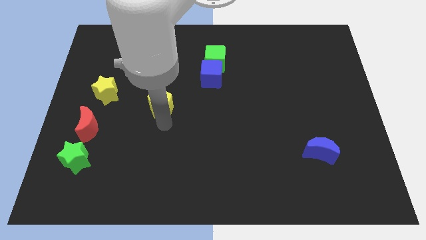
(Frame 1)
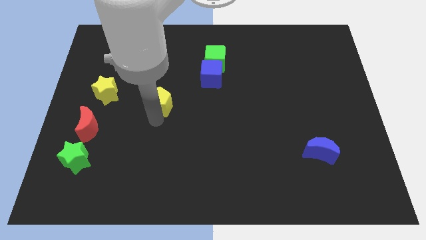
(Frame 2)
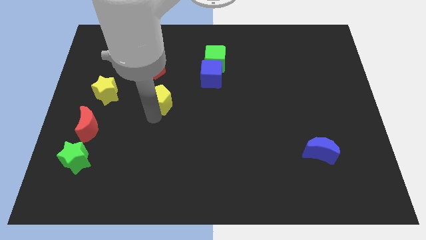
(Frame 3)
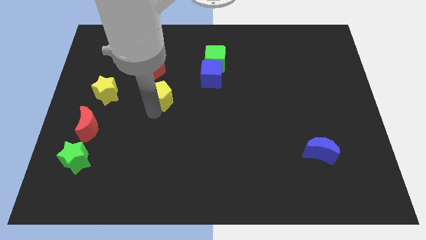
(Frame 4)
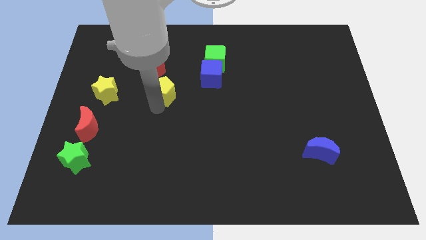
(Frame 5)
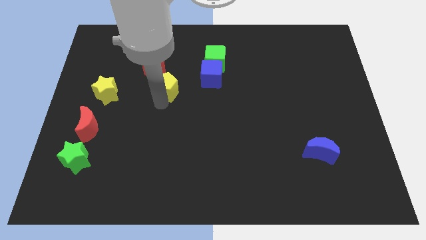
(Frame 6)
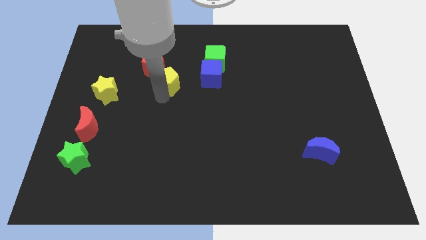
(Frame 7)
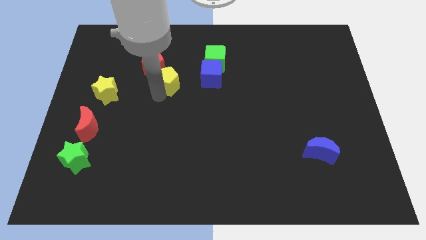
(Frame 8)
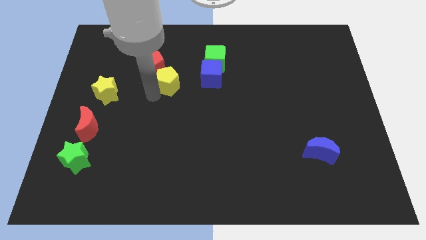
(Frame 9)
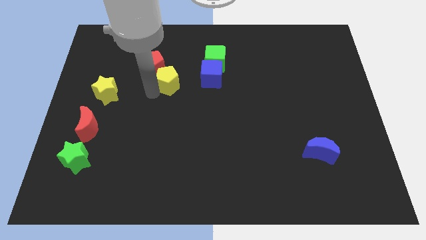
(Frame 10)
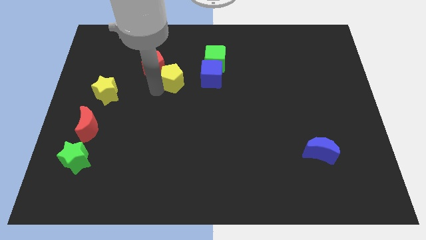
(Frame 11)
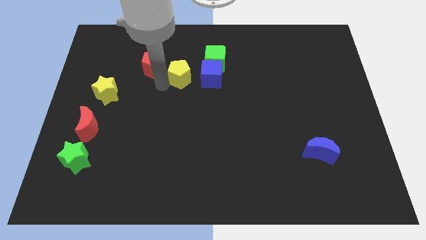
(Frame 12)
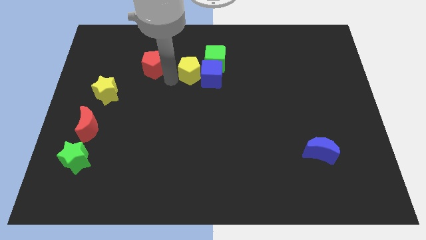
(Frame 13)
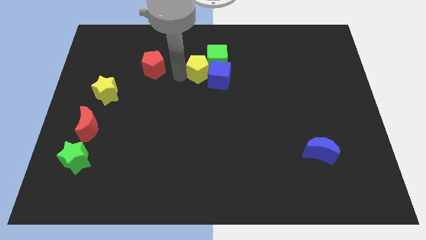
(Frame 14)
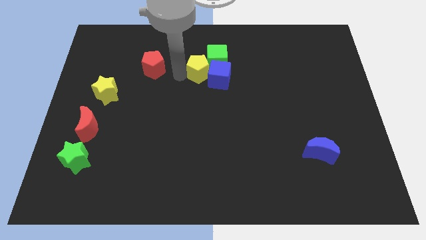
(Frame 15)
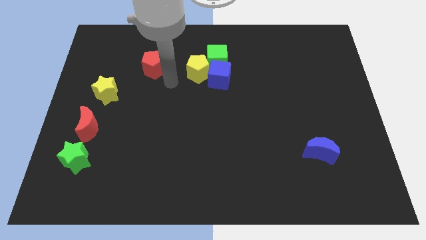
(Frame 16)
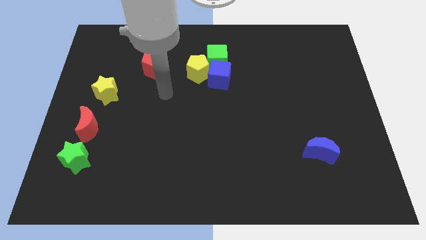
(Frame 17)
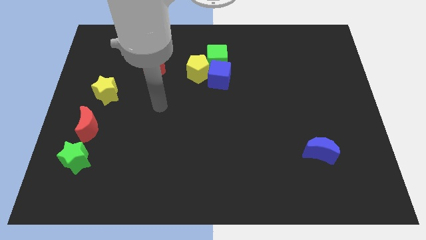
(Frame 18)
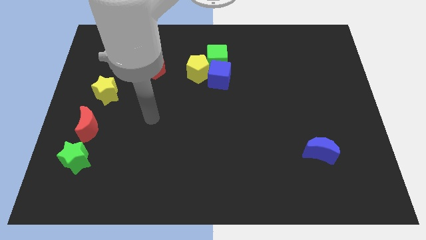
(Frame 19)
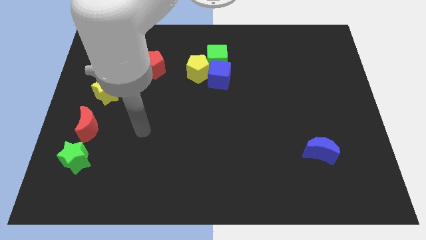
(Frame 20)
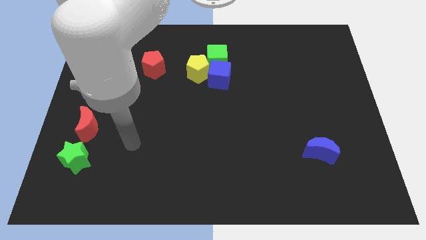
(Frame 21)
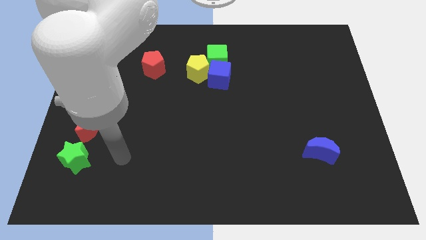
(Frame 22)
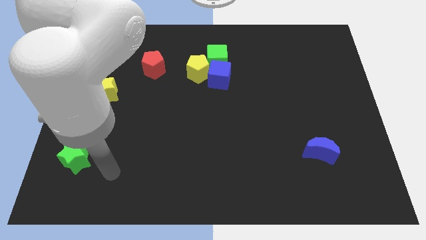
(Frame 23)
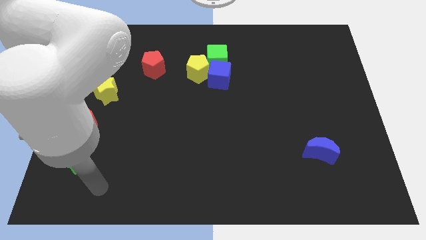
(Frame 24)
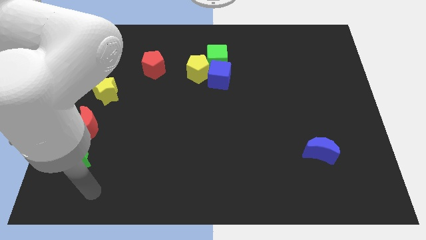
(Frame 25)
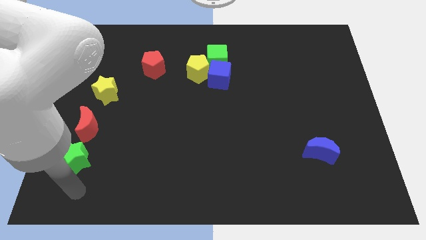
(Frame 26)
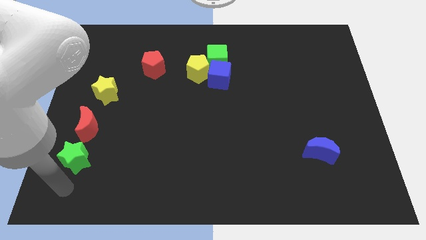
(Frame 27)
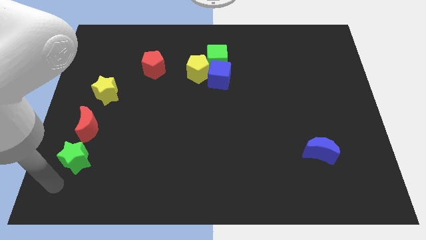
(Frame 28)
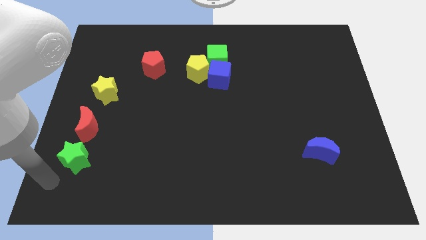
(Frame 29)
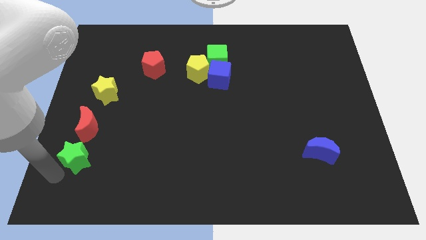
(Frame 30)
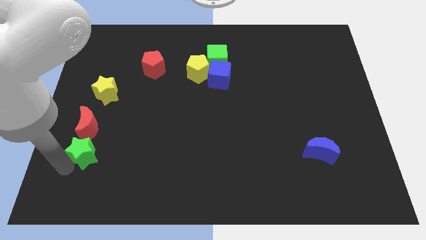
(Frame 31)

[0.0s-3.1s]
place the yellow pentagon to the left of blue cube

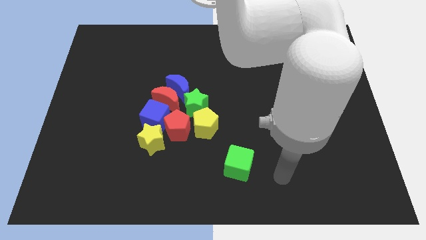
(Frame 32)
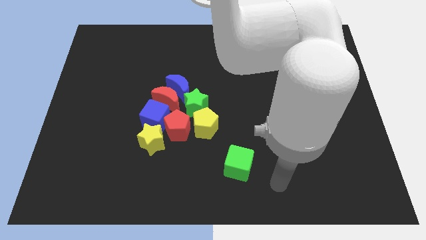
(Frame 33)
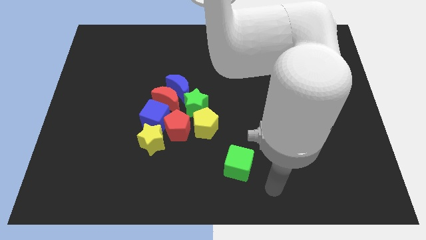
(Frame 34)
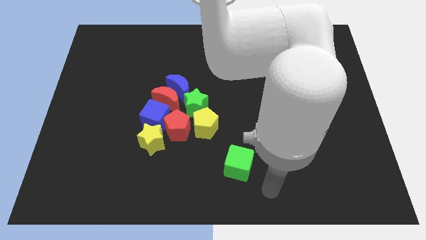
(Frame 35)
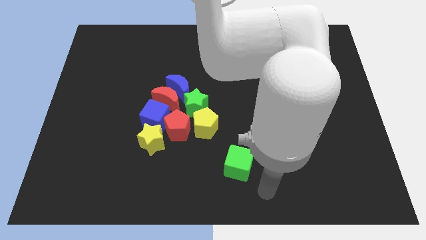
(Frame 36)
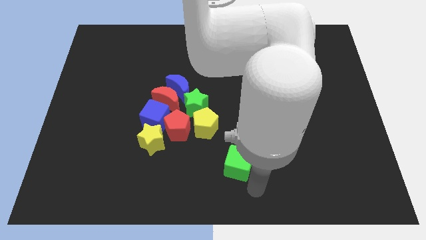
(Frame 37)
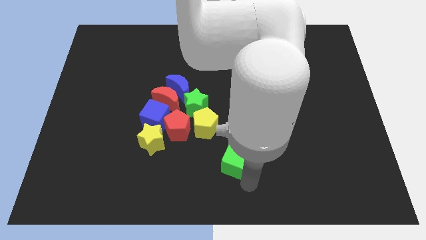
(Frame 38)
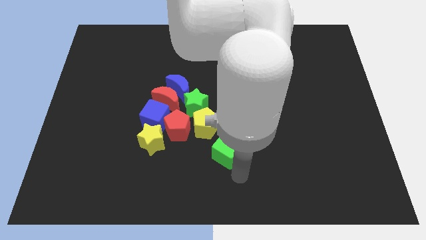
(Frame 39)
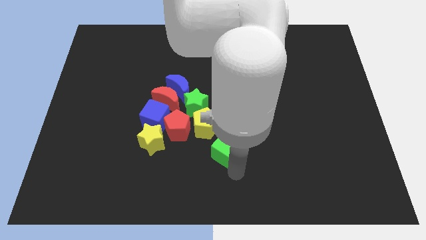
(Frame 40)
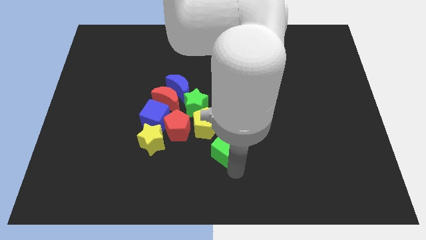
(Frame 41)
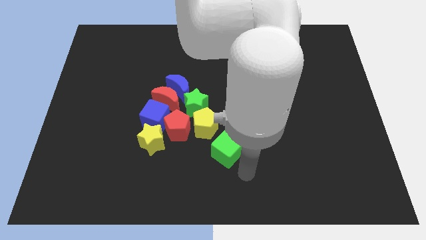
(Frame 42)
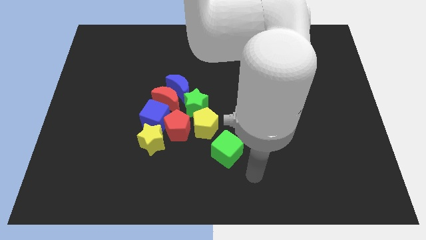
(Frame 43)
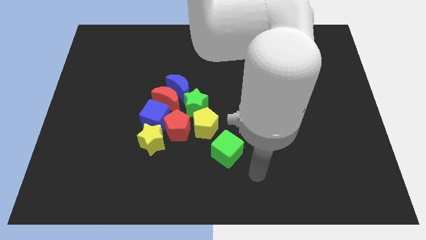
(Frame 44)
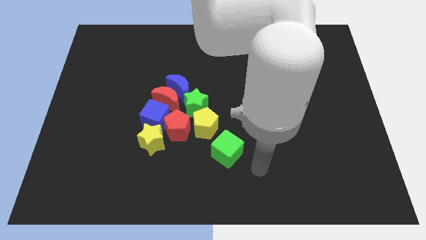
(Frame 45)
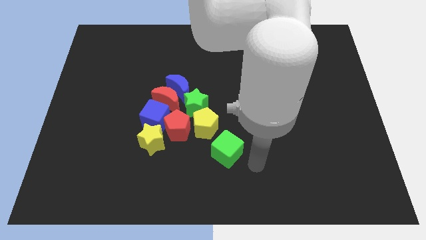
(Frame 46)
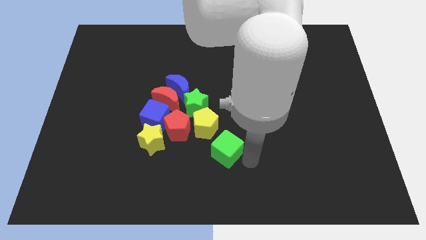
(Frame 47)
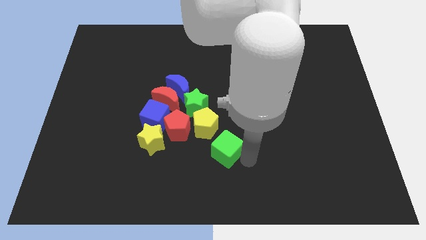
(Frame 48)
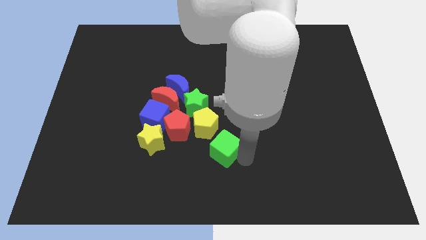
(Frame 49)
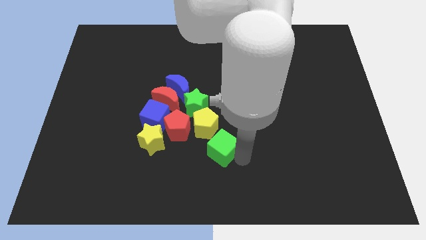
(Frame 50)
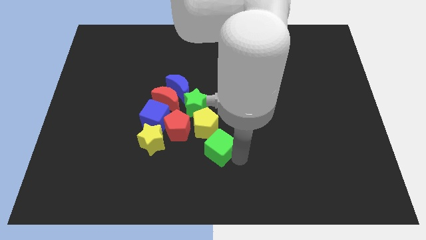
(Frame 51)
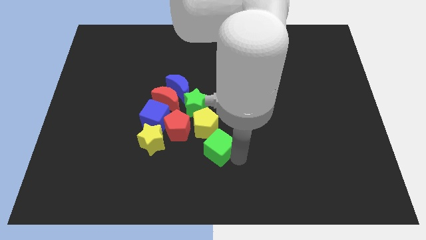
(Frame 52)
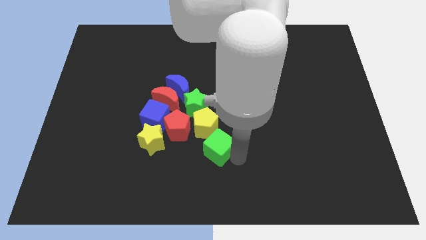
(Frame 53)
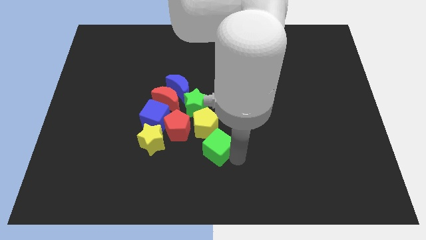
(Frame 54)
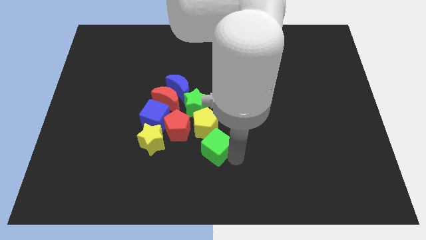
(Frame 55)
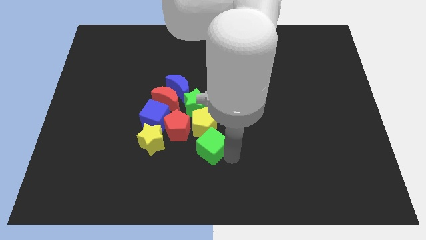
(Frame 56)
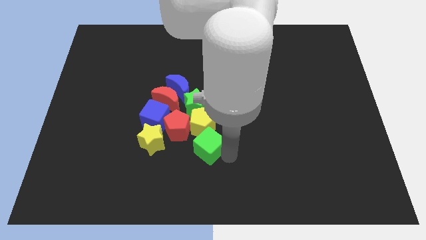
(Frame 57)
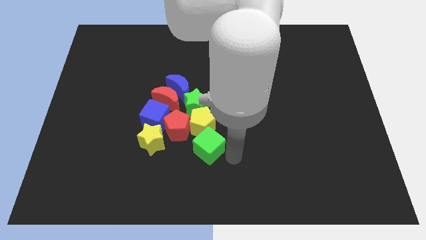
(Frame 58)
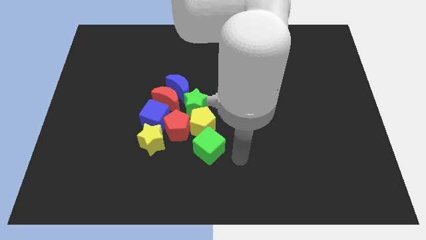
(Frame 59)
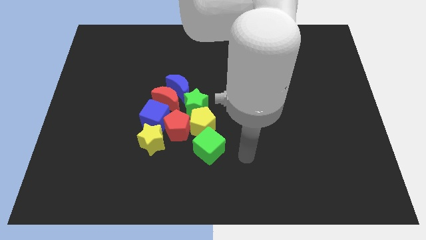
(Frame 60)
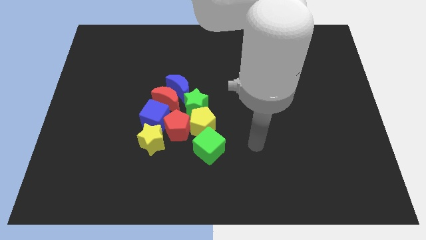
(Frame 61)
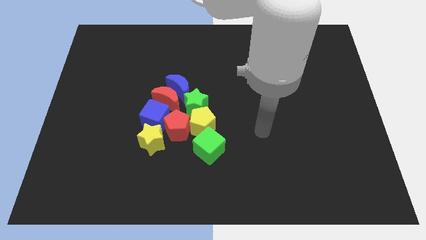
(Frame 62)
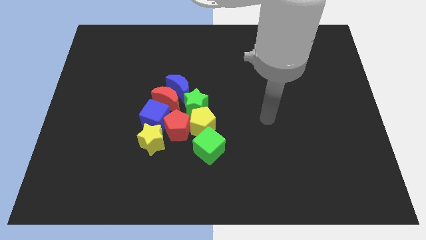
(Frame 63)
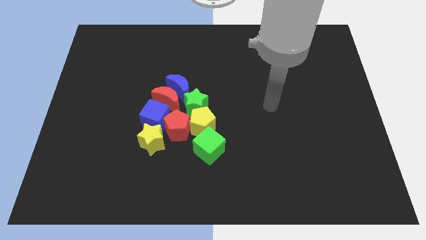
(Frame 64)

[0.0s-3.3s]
push the green cube to the bottom of the yellow pentagon

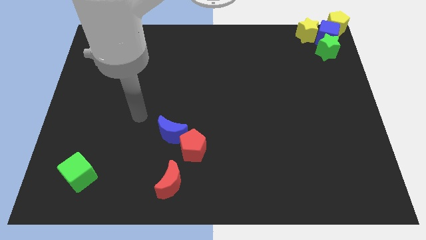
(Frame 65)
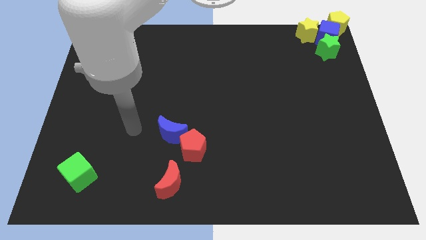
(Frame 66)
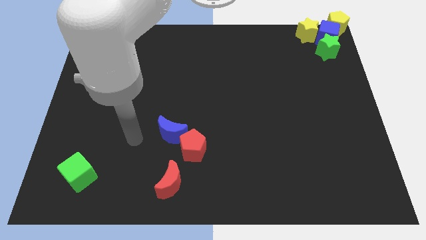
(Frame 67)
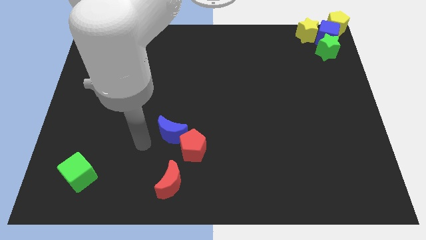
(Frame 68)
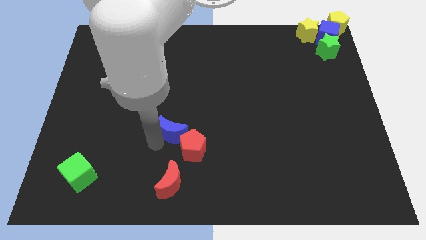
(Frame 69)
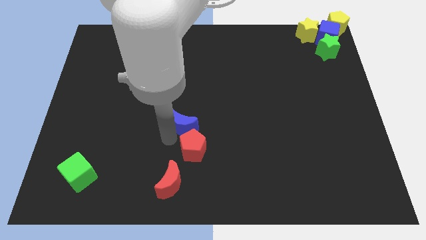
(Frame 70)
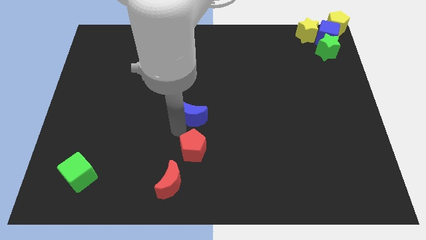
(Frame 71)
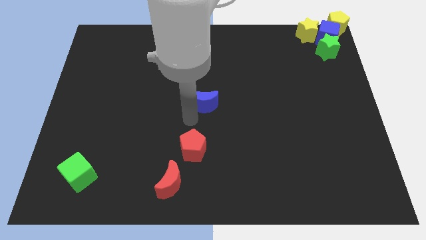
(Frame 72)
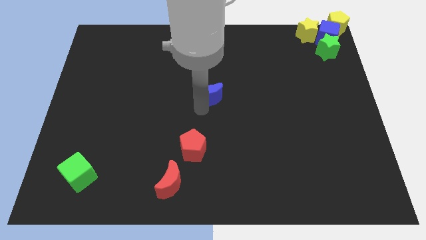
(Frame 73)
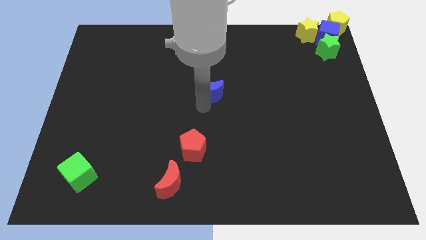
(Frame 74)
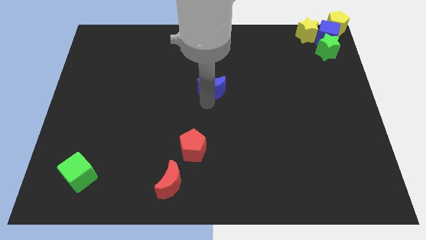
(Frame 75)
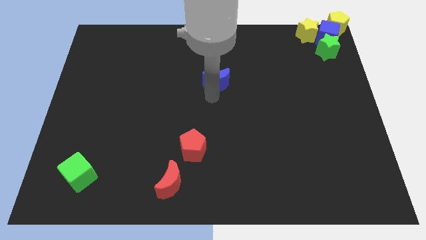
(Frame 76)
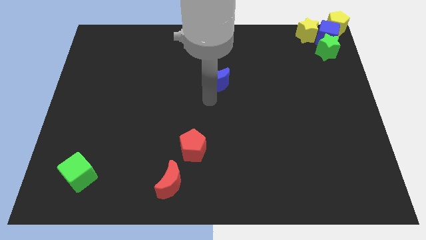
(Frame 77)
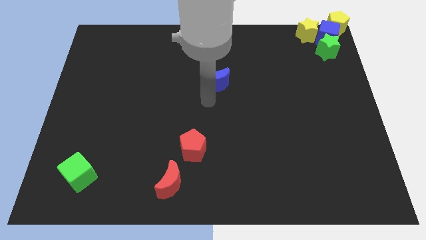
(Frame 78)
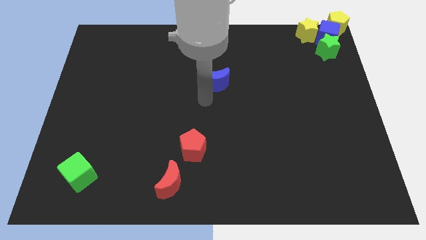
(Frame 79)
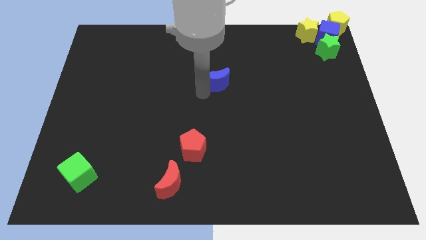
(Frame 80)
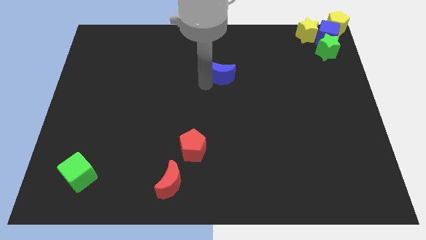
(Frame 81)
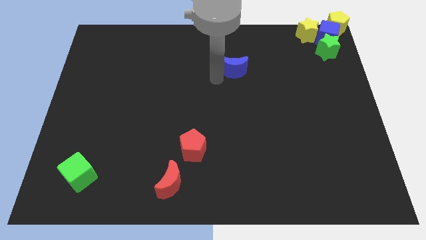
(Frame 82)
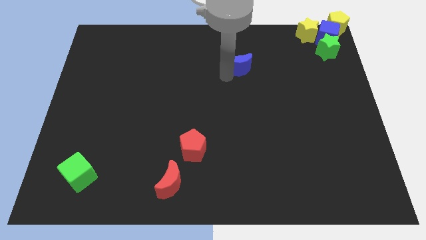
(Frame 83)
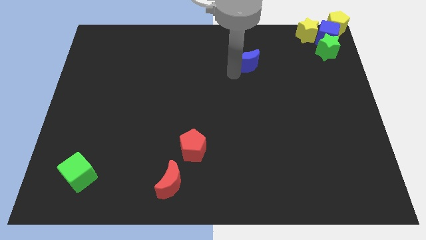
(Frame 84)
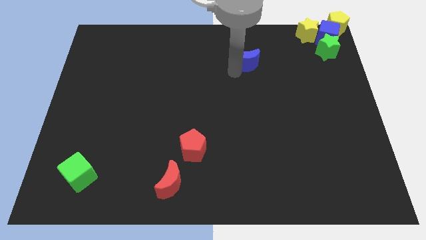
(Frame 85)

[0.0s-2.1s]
separate the blue moon from the red pentagon

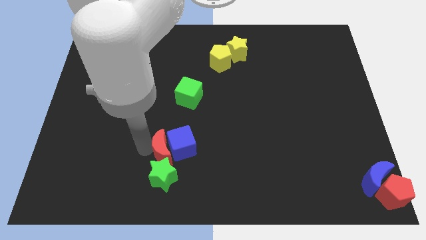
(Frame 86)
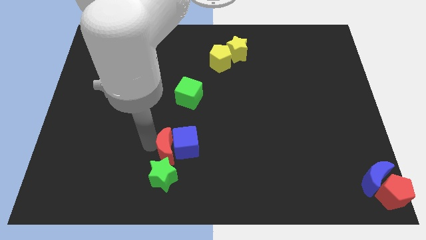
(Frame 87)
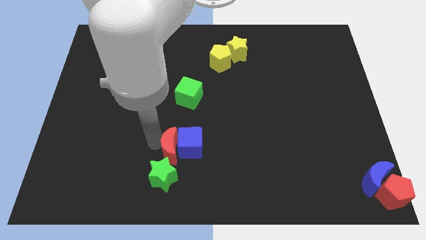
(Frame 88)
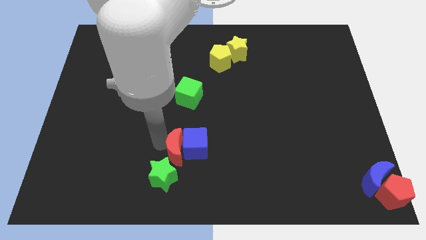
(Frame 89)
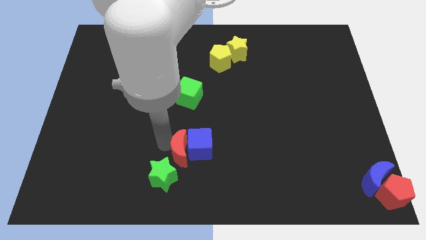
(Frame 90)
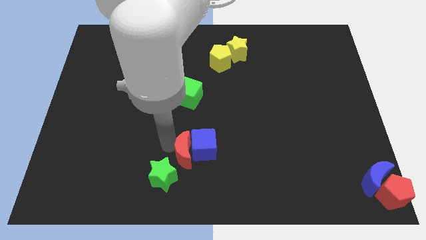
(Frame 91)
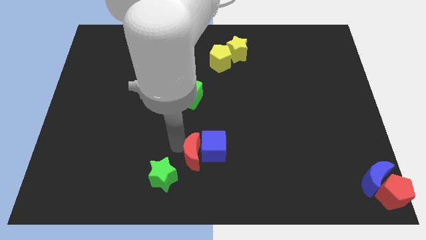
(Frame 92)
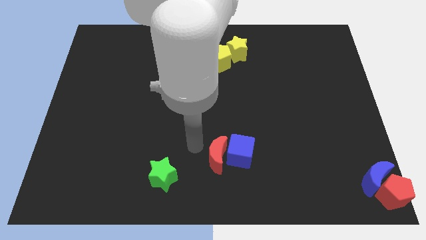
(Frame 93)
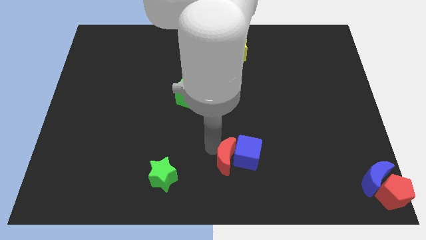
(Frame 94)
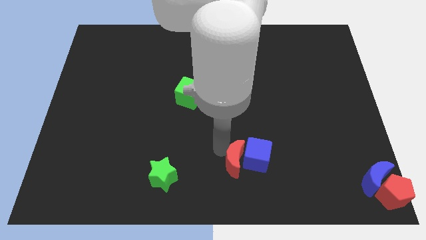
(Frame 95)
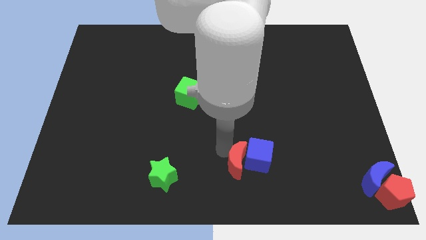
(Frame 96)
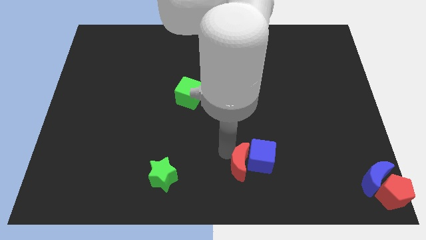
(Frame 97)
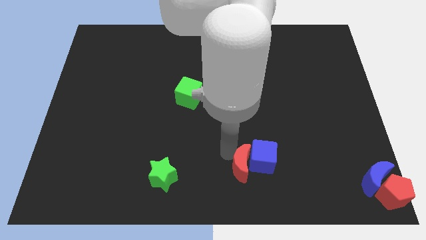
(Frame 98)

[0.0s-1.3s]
push the red moon with the blue cube slightly to the right
